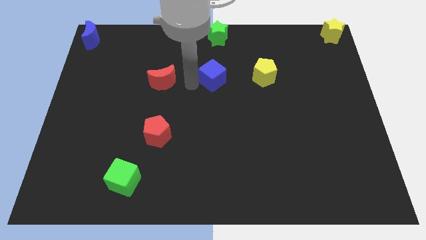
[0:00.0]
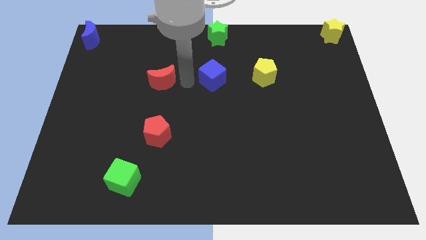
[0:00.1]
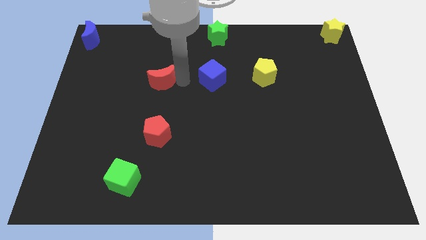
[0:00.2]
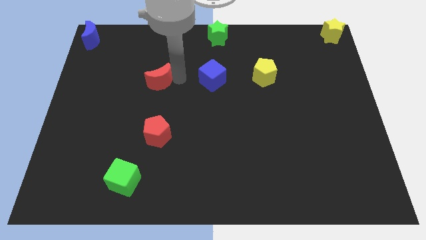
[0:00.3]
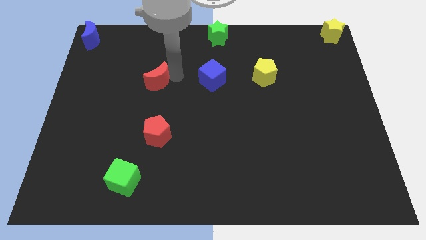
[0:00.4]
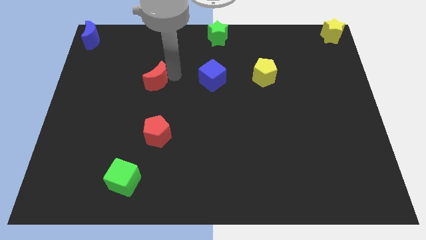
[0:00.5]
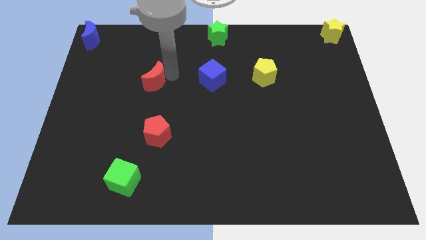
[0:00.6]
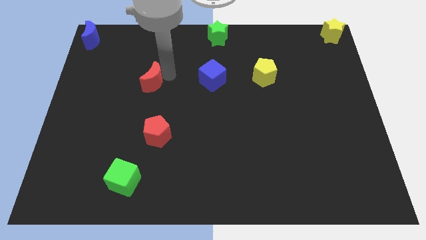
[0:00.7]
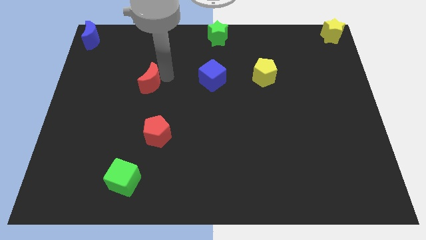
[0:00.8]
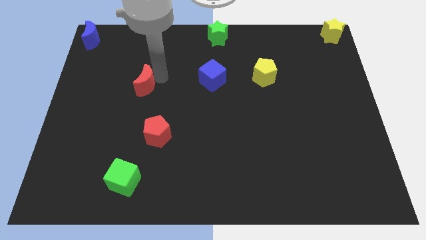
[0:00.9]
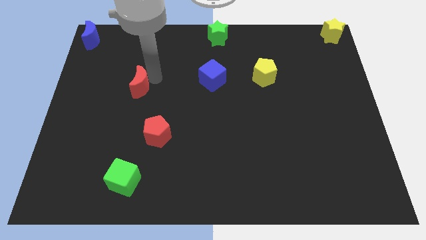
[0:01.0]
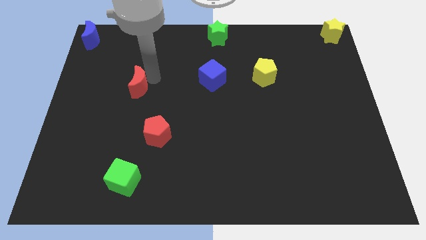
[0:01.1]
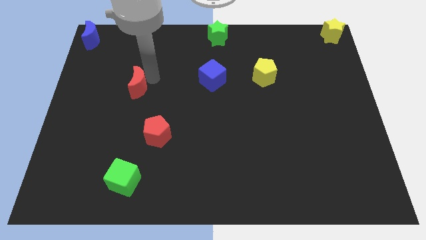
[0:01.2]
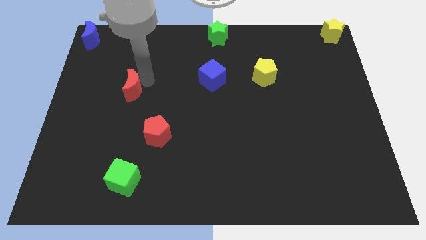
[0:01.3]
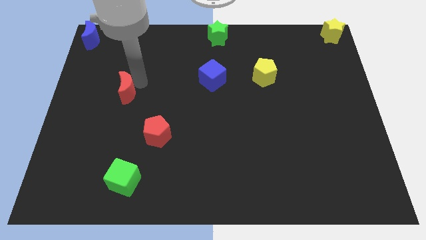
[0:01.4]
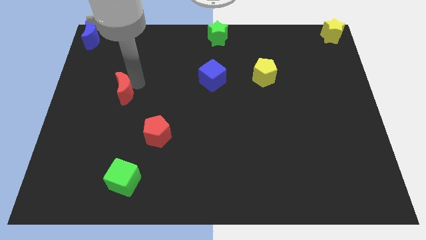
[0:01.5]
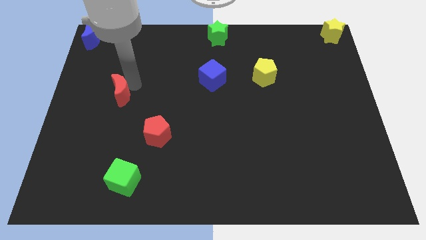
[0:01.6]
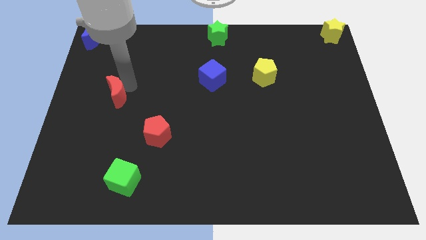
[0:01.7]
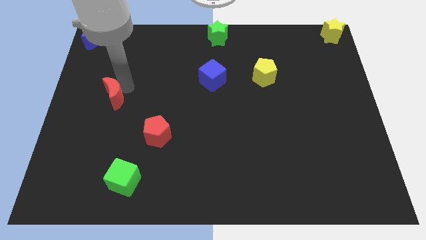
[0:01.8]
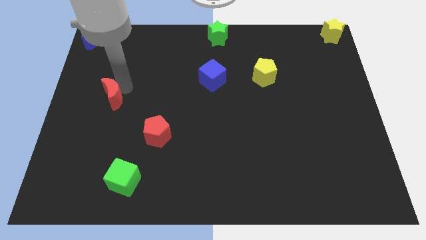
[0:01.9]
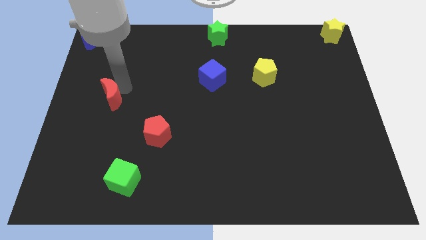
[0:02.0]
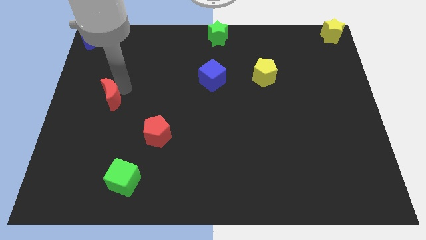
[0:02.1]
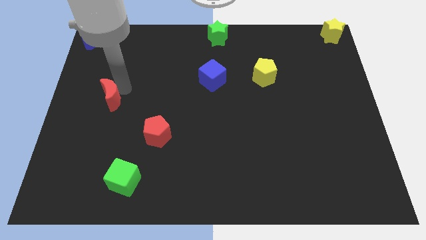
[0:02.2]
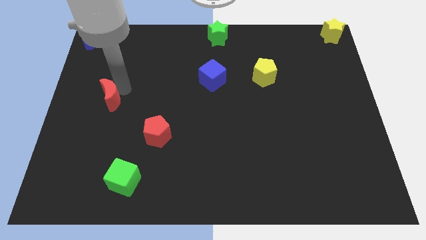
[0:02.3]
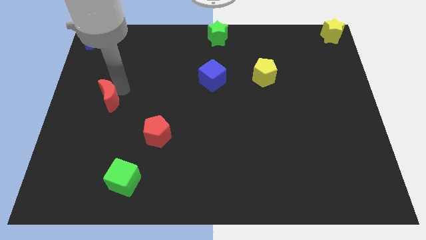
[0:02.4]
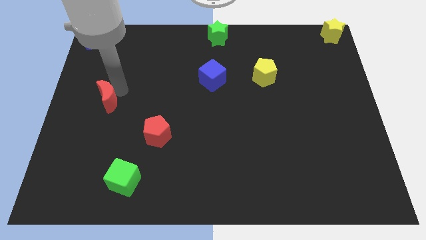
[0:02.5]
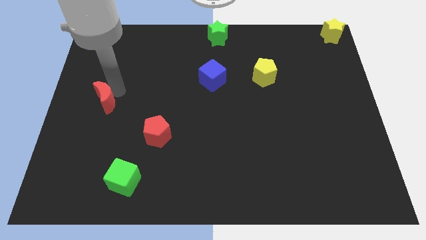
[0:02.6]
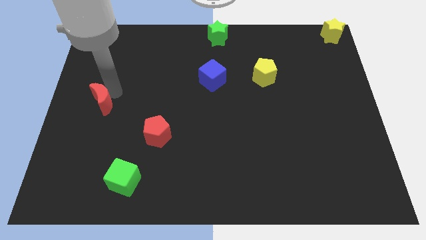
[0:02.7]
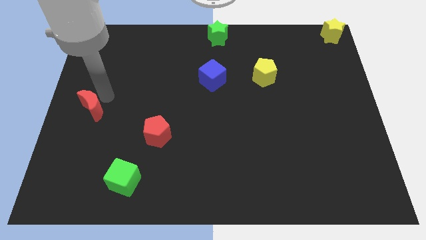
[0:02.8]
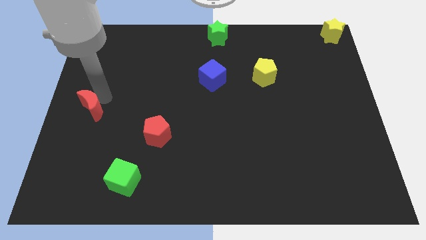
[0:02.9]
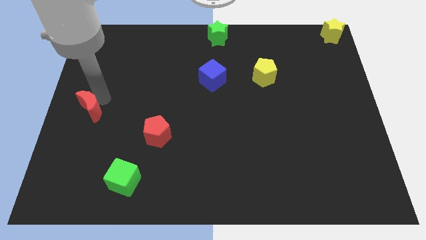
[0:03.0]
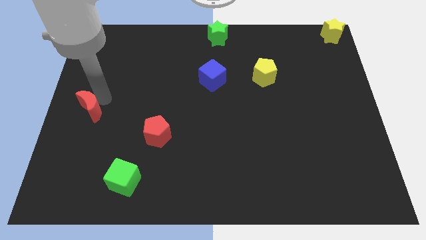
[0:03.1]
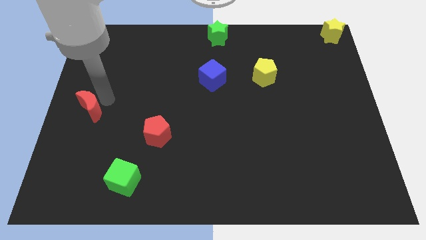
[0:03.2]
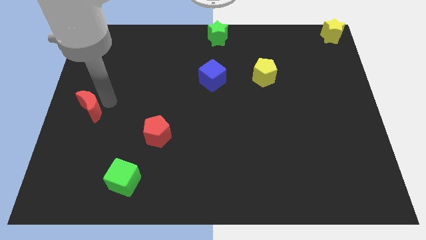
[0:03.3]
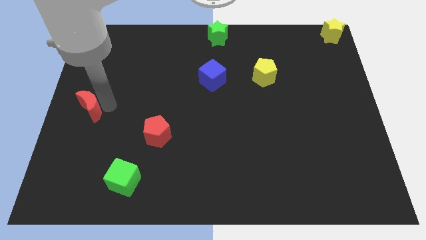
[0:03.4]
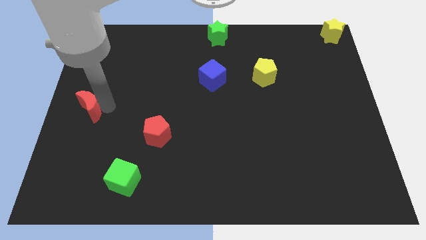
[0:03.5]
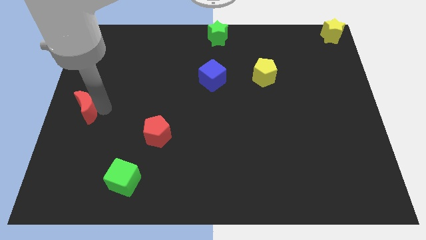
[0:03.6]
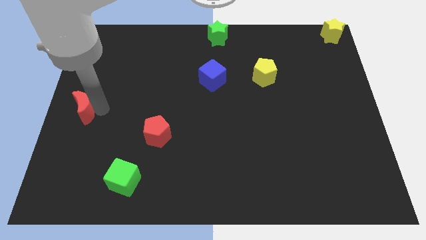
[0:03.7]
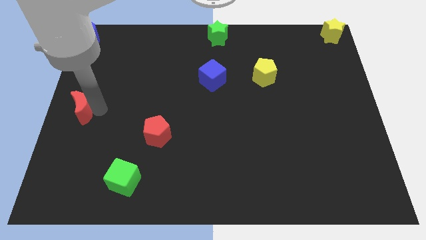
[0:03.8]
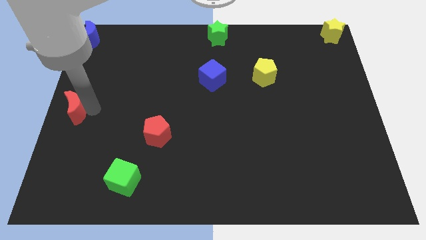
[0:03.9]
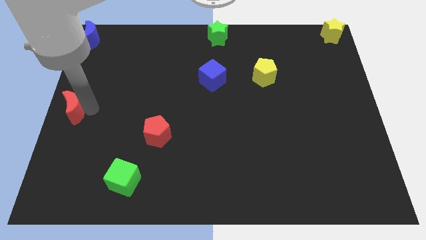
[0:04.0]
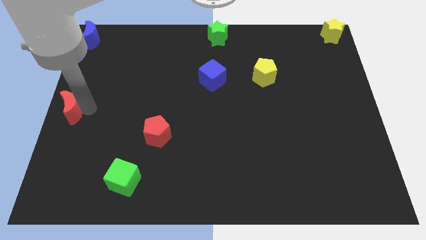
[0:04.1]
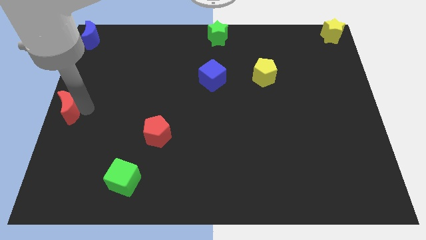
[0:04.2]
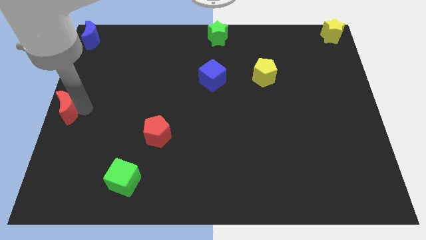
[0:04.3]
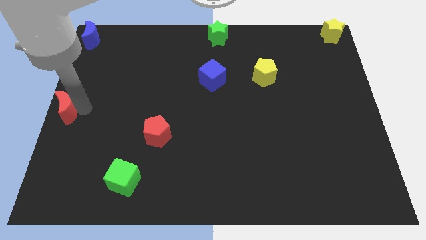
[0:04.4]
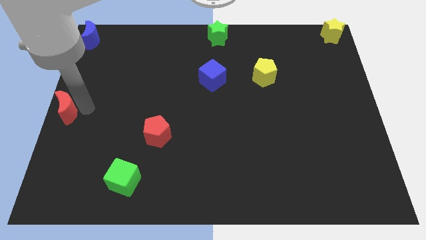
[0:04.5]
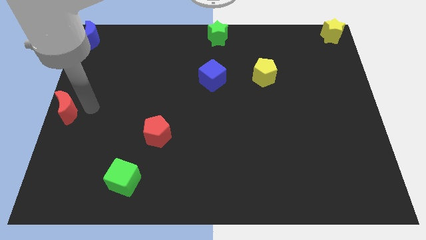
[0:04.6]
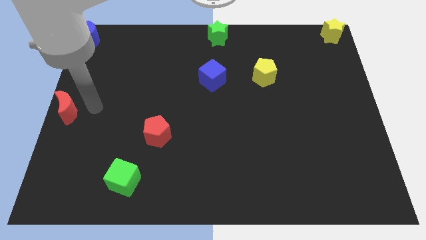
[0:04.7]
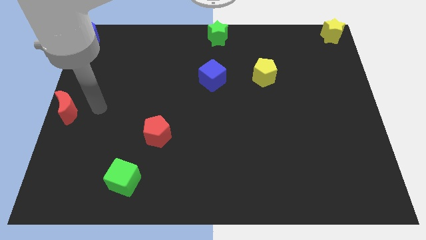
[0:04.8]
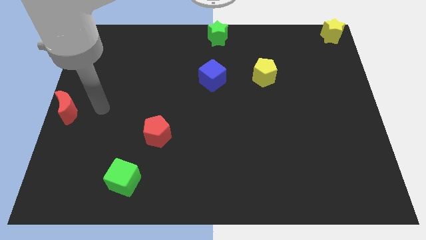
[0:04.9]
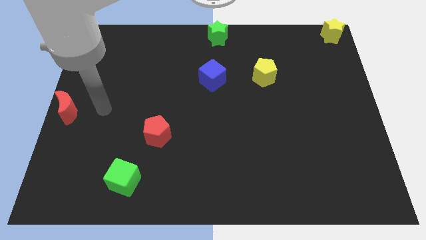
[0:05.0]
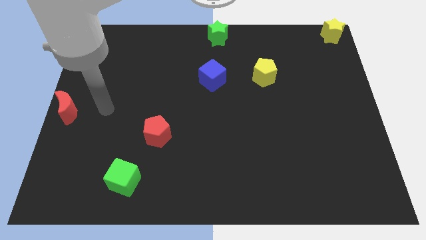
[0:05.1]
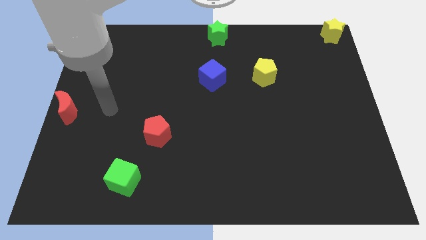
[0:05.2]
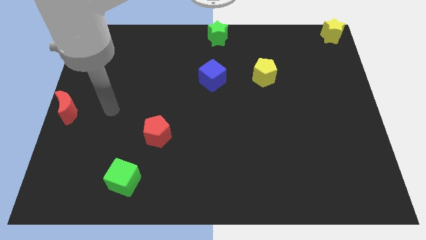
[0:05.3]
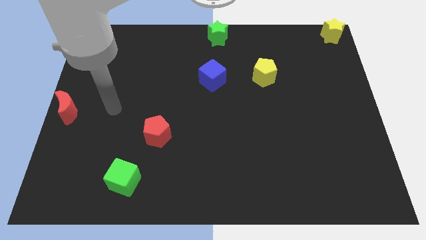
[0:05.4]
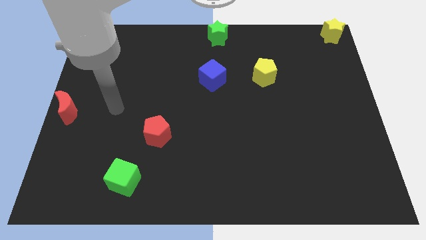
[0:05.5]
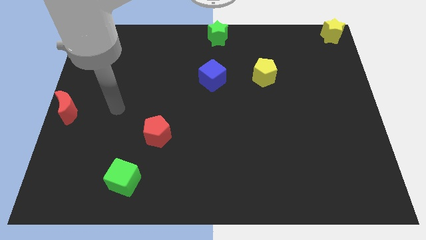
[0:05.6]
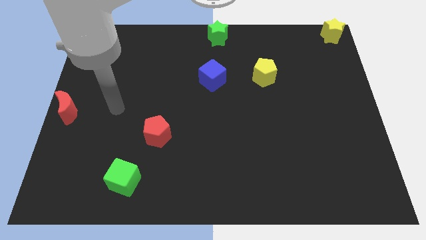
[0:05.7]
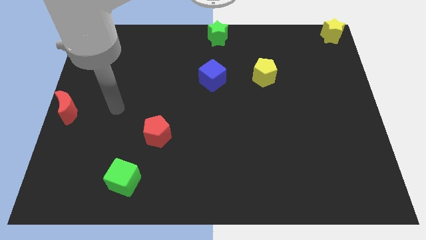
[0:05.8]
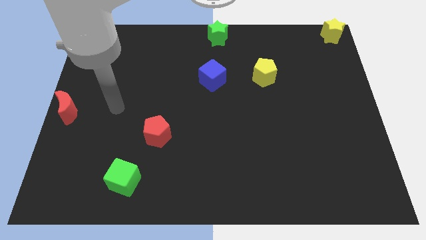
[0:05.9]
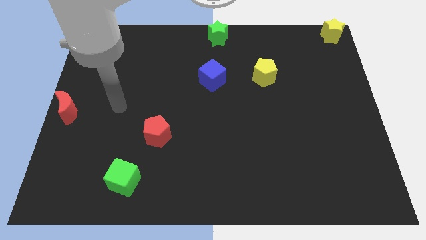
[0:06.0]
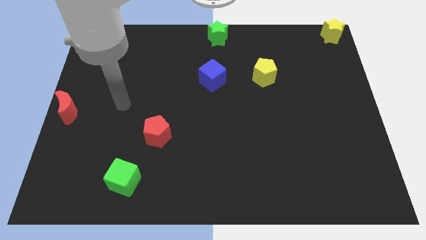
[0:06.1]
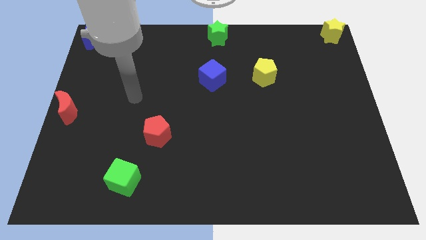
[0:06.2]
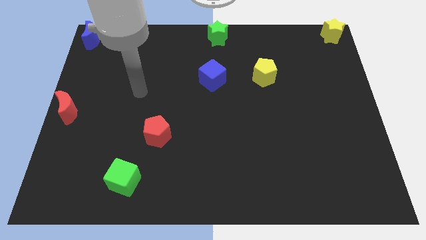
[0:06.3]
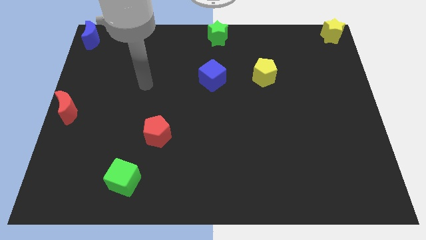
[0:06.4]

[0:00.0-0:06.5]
push the red moon to the left center of the board

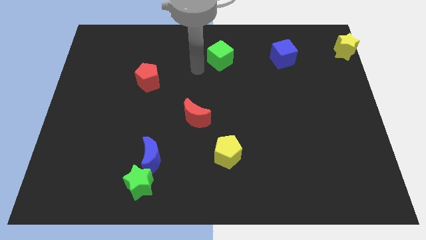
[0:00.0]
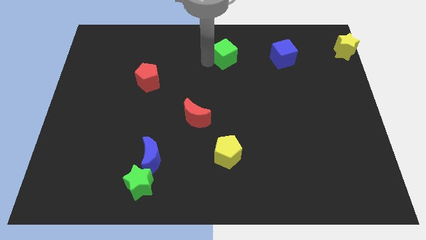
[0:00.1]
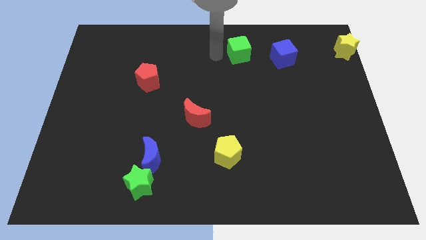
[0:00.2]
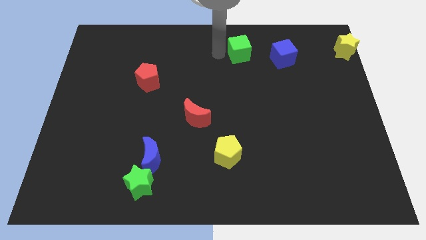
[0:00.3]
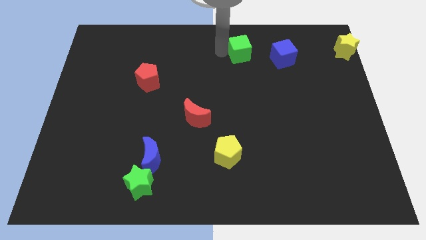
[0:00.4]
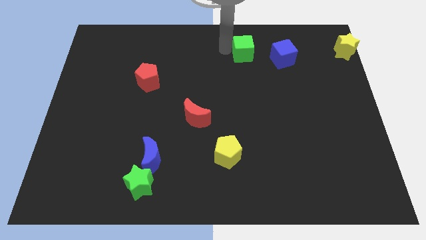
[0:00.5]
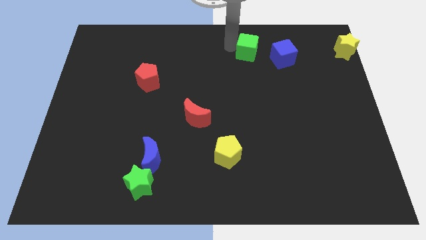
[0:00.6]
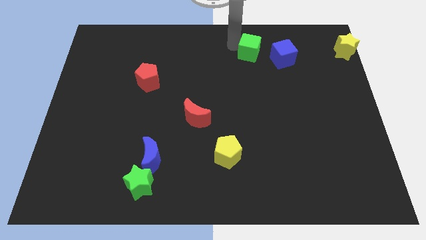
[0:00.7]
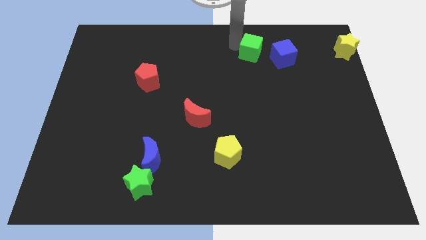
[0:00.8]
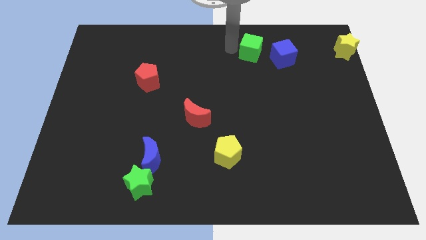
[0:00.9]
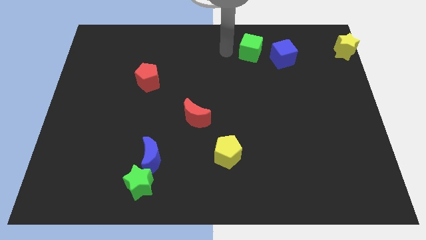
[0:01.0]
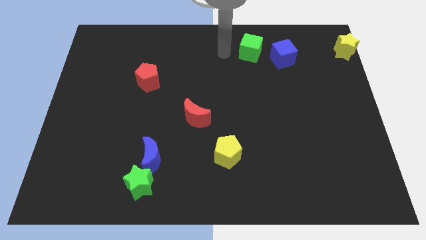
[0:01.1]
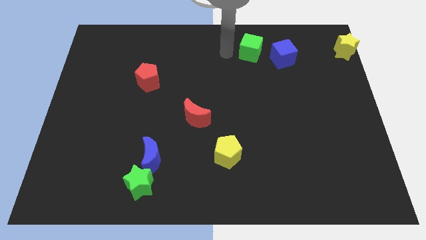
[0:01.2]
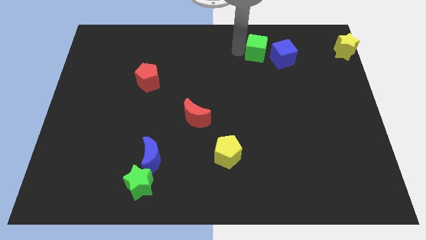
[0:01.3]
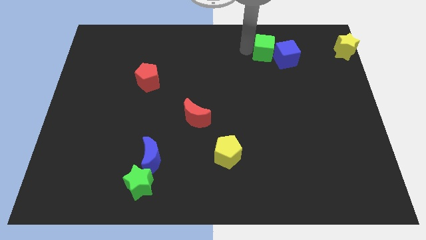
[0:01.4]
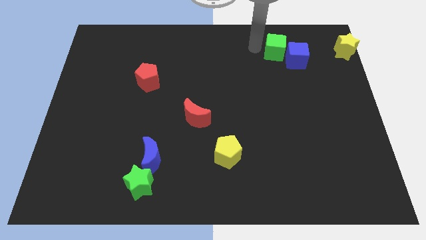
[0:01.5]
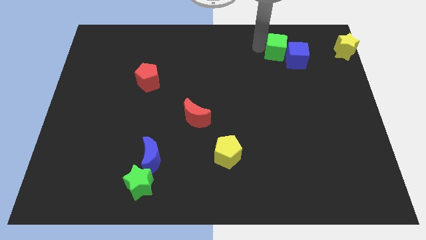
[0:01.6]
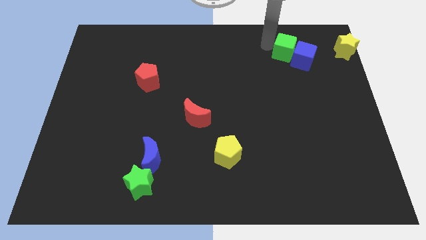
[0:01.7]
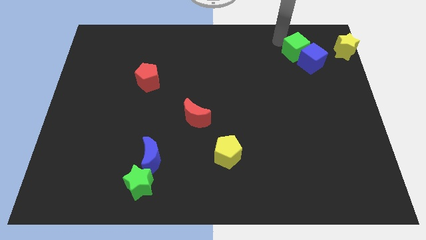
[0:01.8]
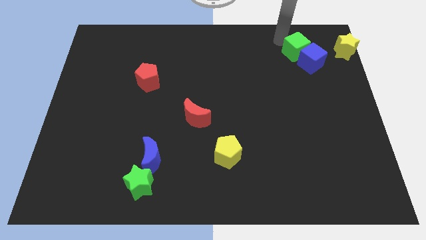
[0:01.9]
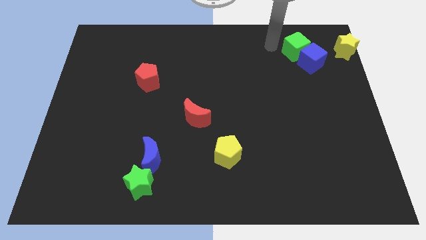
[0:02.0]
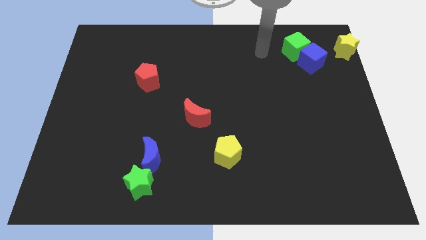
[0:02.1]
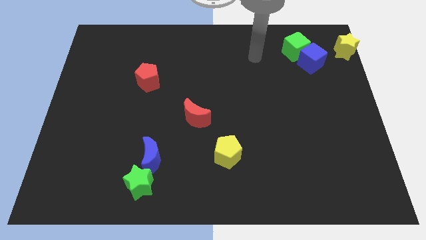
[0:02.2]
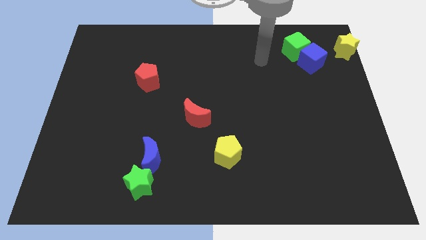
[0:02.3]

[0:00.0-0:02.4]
place the green cube above the blue cube
